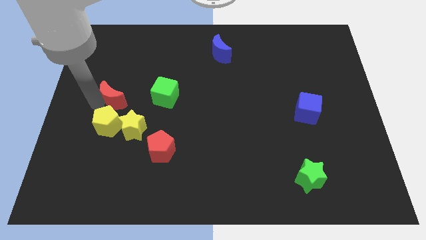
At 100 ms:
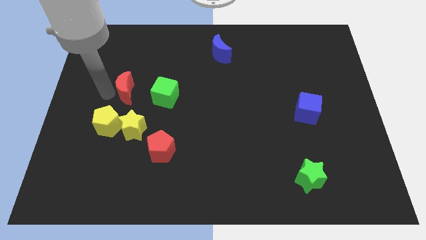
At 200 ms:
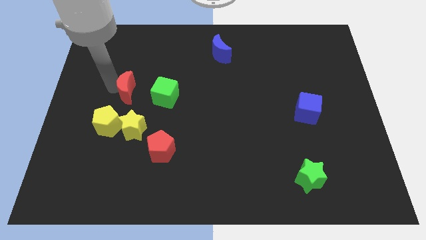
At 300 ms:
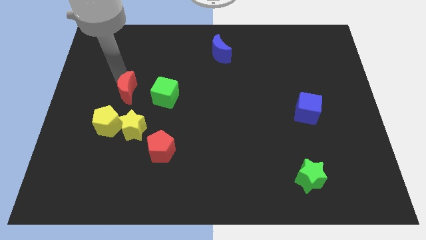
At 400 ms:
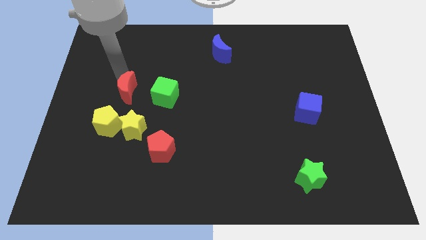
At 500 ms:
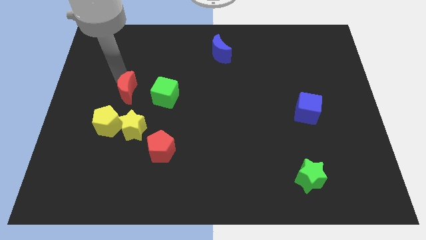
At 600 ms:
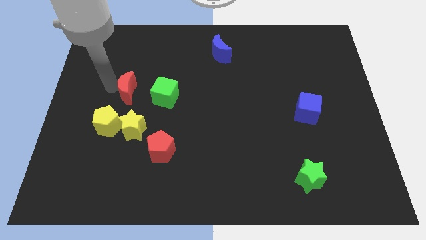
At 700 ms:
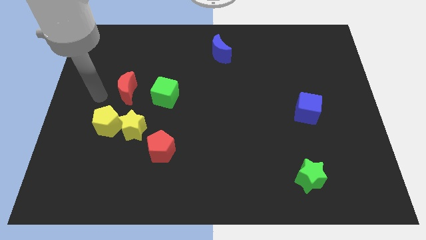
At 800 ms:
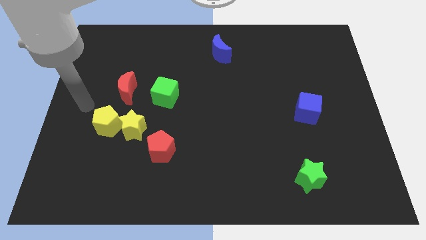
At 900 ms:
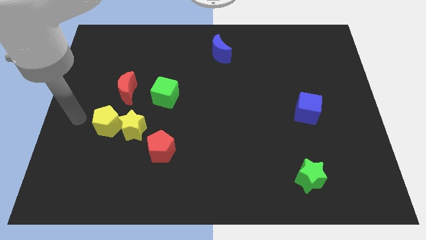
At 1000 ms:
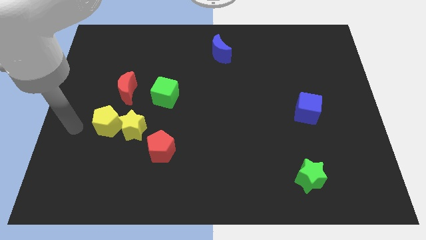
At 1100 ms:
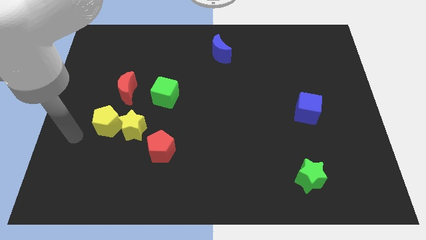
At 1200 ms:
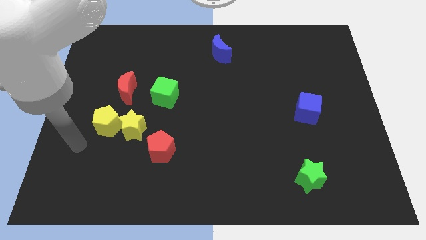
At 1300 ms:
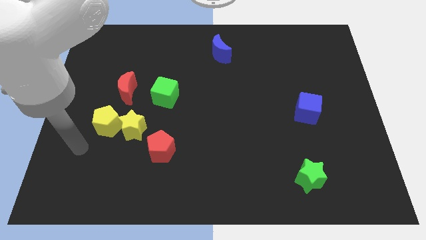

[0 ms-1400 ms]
move red moon close to the green cube

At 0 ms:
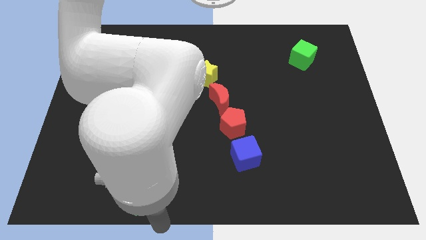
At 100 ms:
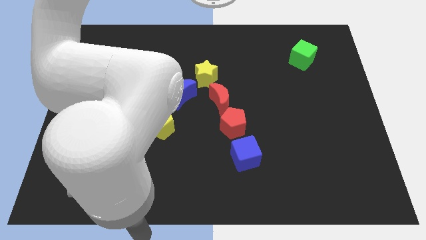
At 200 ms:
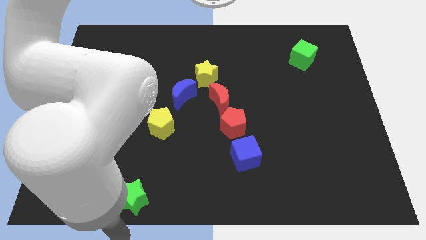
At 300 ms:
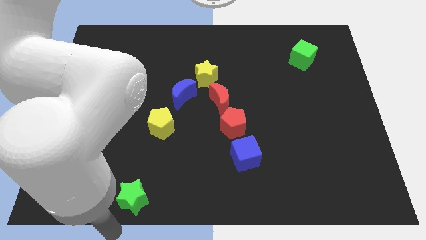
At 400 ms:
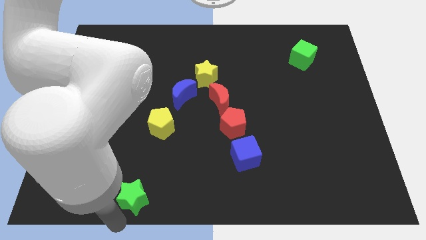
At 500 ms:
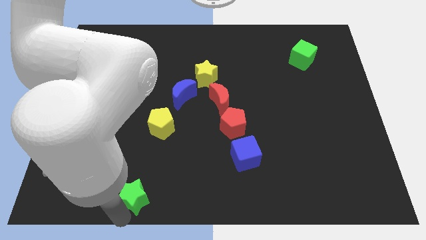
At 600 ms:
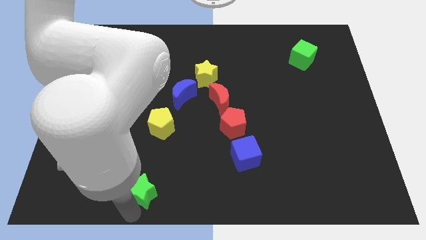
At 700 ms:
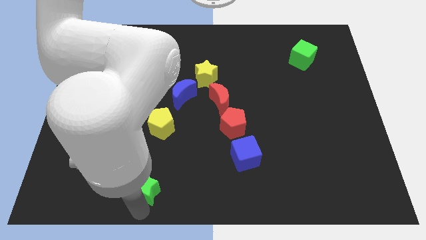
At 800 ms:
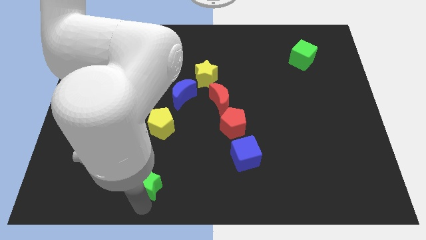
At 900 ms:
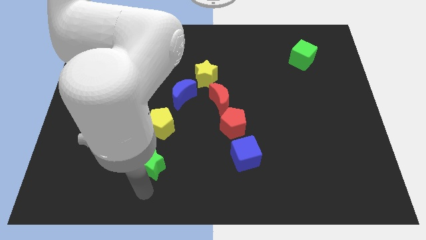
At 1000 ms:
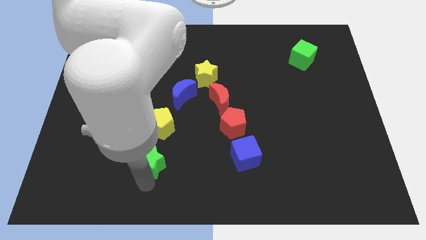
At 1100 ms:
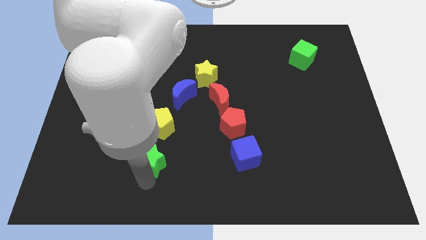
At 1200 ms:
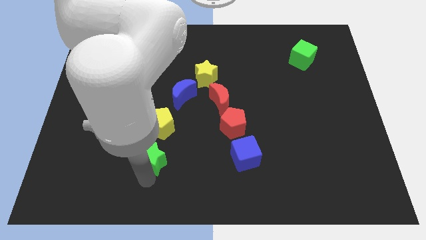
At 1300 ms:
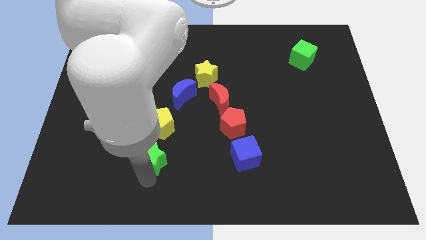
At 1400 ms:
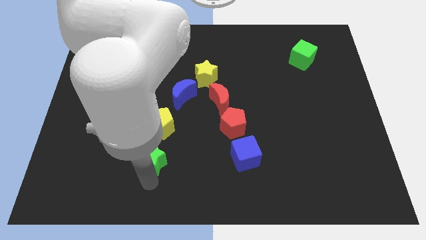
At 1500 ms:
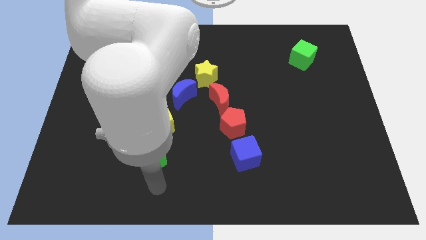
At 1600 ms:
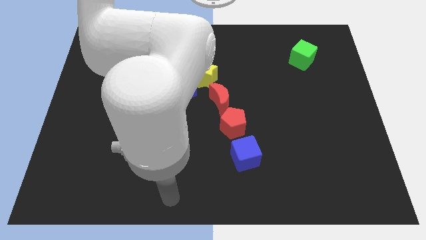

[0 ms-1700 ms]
move green star to the bottom of yellow pentagon

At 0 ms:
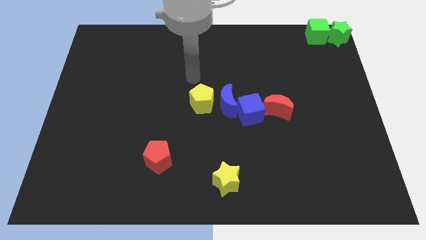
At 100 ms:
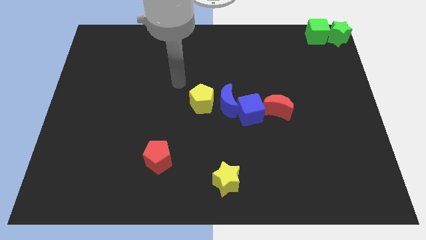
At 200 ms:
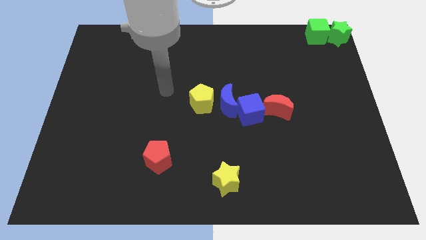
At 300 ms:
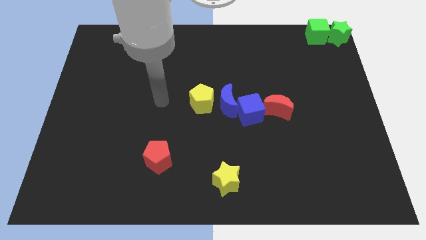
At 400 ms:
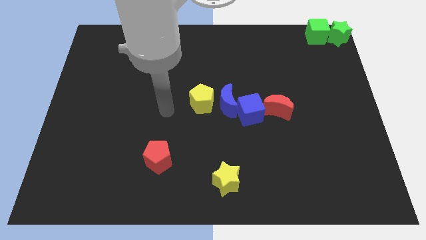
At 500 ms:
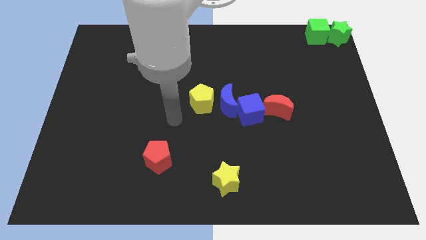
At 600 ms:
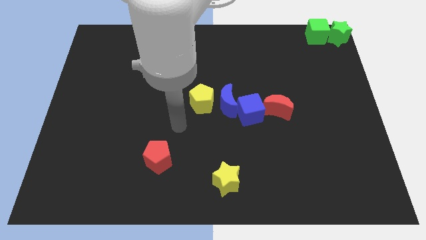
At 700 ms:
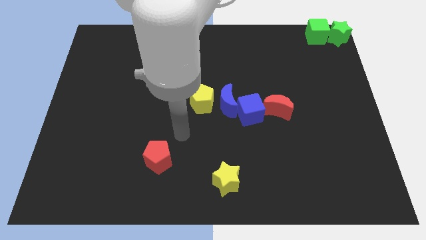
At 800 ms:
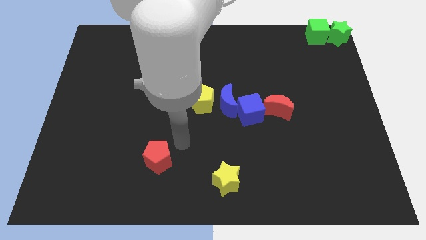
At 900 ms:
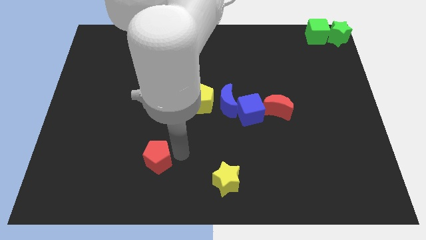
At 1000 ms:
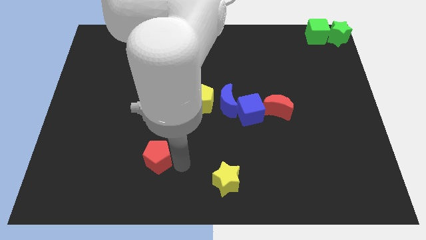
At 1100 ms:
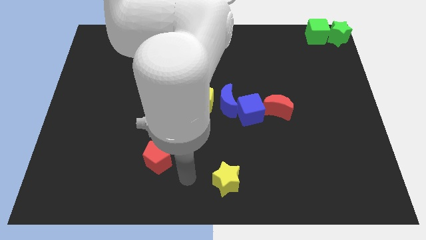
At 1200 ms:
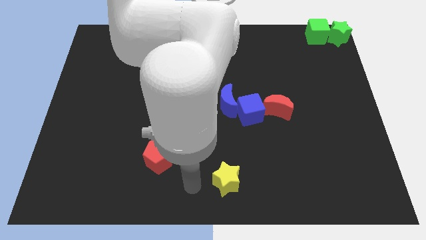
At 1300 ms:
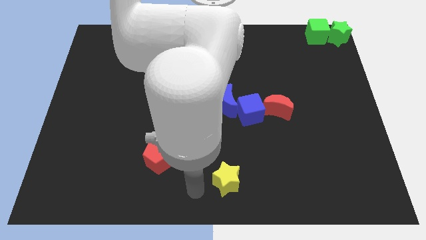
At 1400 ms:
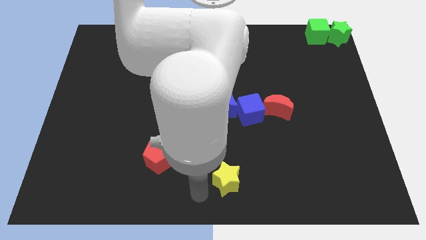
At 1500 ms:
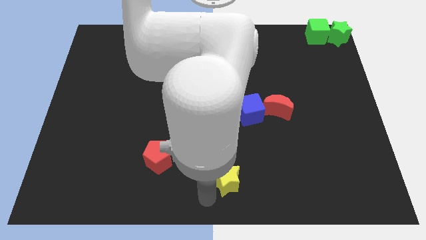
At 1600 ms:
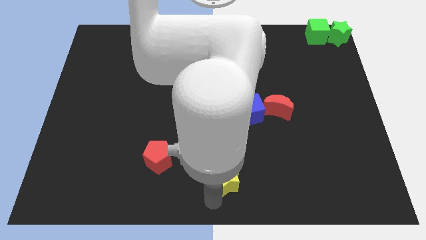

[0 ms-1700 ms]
move your arm to the left side of the yellow star

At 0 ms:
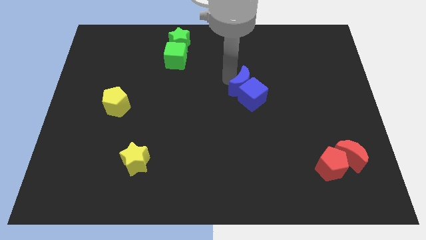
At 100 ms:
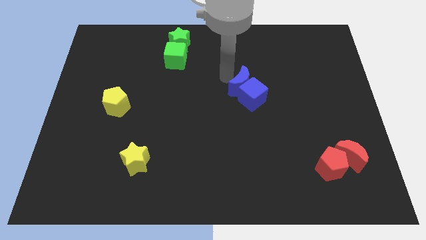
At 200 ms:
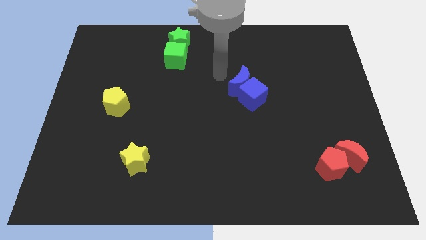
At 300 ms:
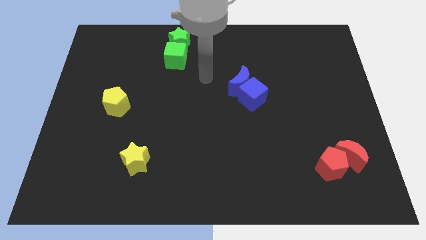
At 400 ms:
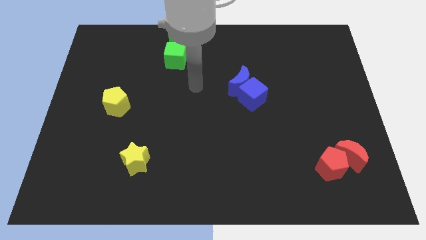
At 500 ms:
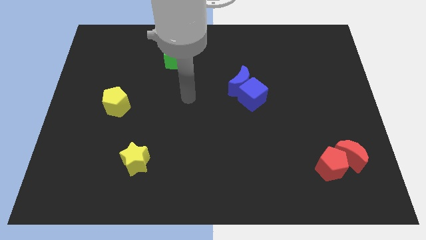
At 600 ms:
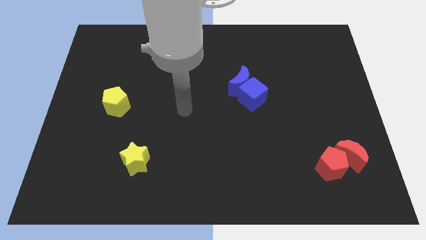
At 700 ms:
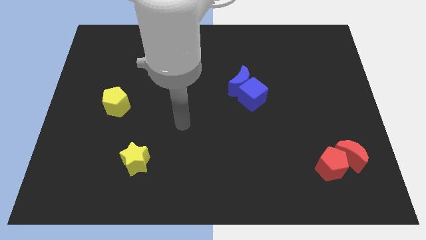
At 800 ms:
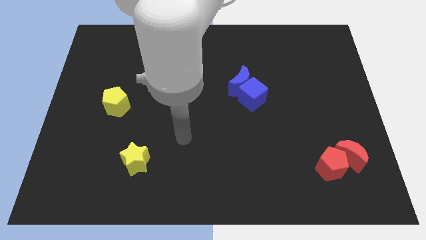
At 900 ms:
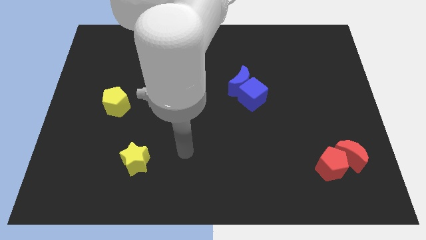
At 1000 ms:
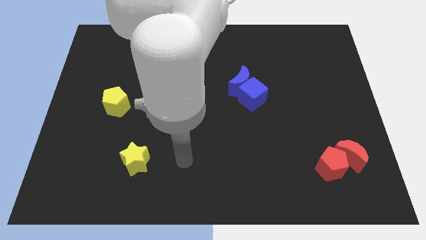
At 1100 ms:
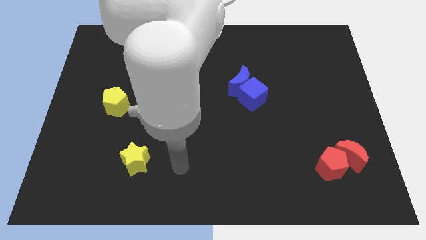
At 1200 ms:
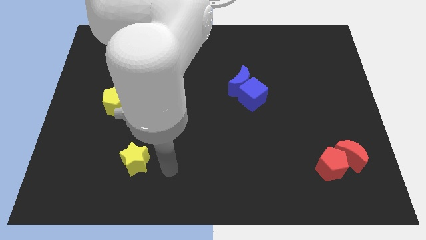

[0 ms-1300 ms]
move your hand away from the blue blocks

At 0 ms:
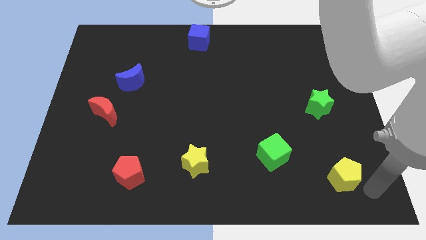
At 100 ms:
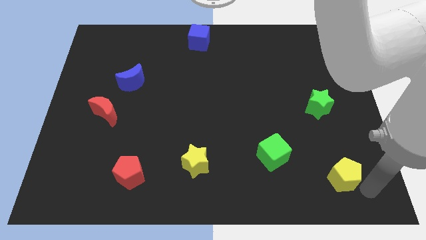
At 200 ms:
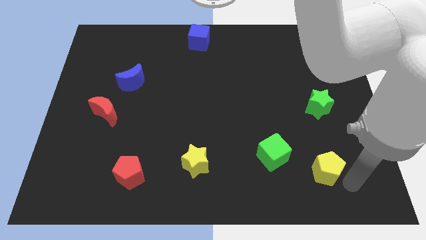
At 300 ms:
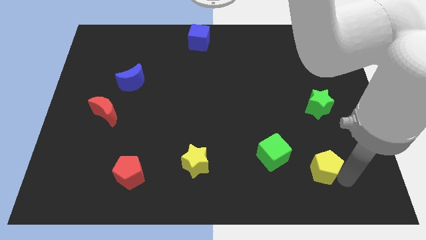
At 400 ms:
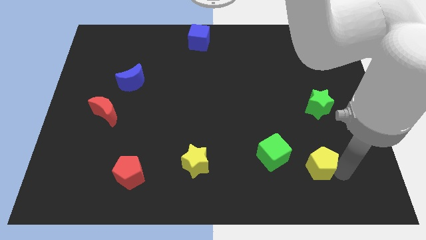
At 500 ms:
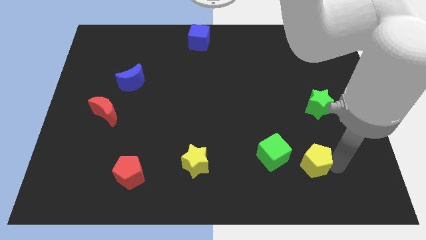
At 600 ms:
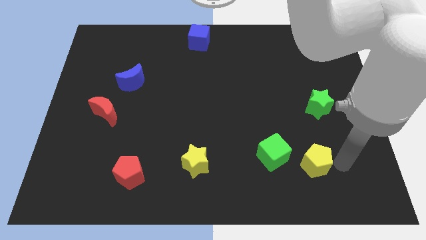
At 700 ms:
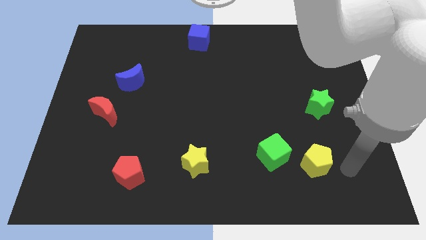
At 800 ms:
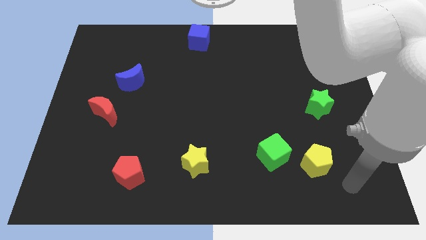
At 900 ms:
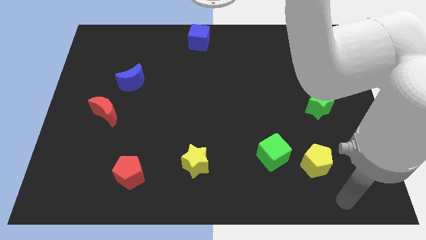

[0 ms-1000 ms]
place the yellow pentagon right to the green cube

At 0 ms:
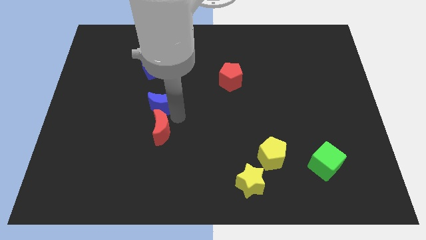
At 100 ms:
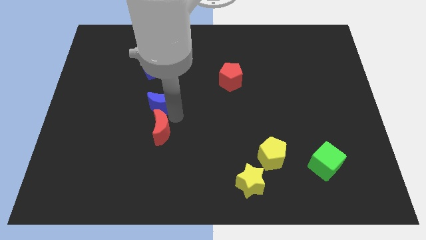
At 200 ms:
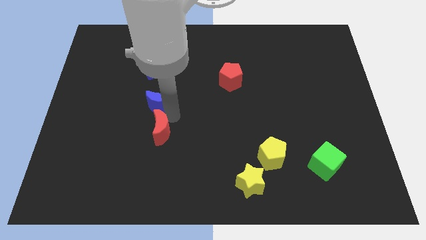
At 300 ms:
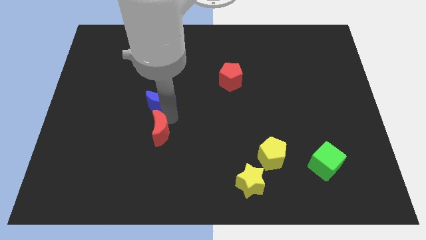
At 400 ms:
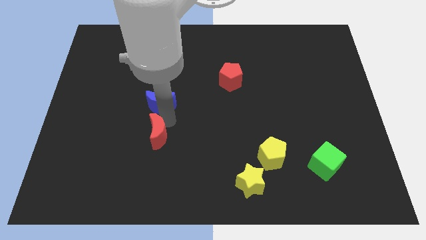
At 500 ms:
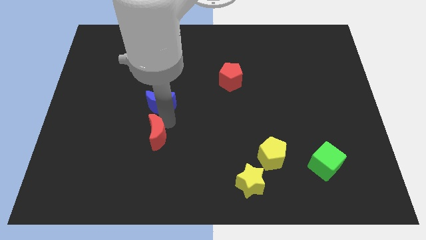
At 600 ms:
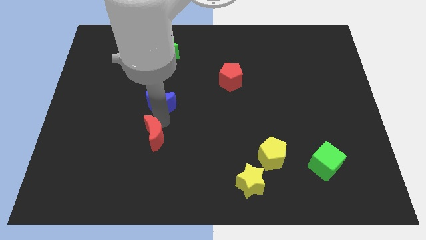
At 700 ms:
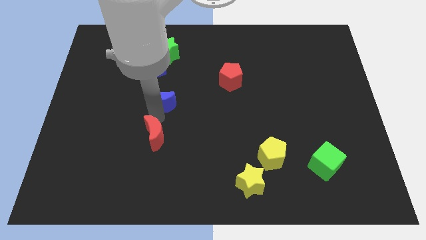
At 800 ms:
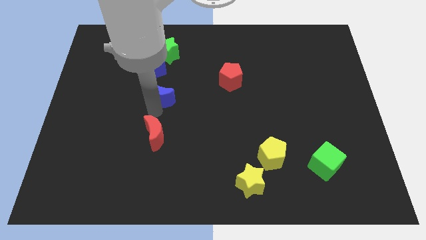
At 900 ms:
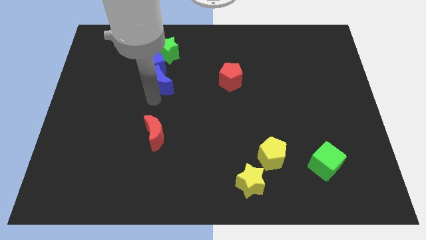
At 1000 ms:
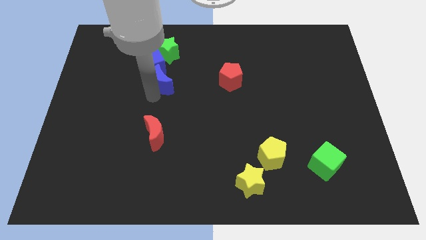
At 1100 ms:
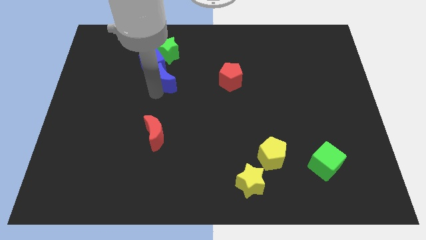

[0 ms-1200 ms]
move the blue moon into the blue cube

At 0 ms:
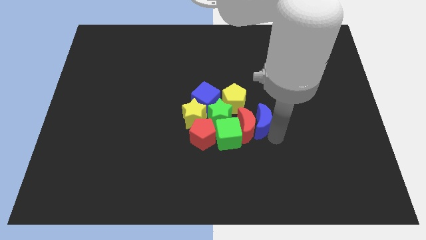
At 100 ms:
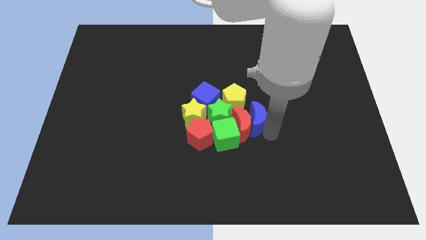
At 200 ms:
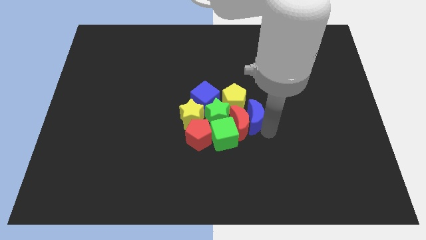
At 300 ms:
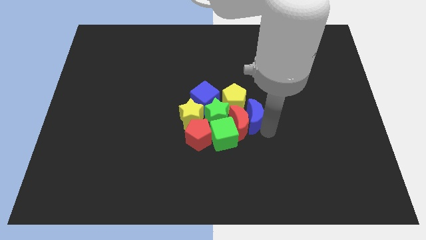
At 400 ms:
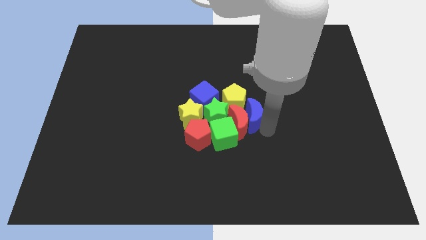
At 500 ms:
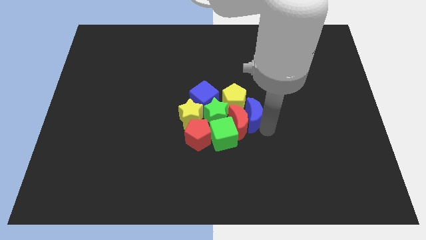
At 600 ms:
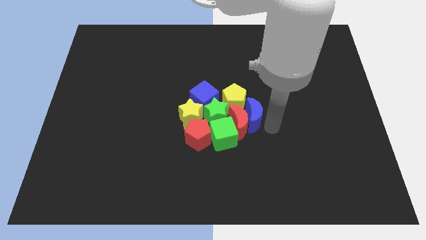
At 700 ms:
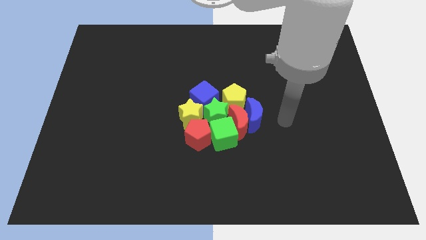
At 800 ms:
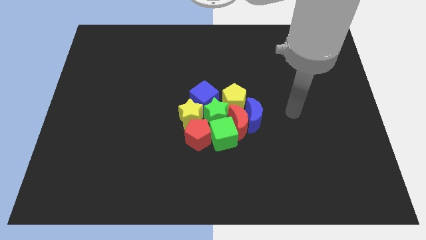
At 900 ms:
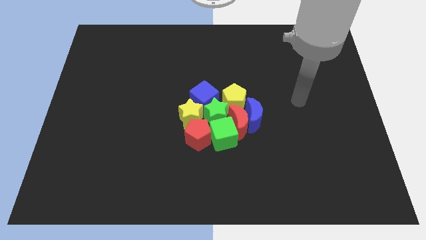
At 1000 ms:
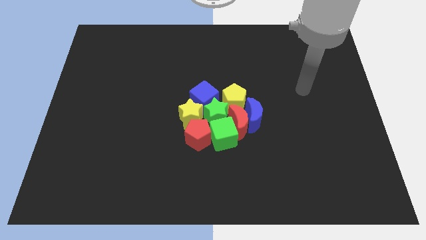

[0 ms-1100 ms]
move your arm away from blue moon
